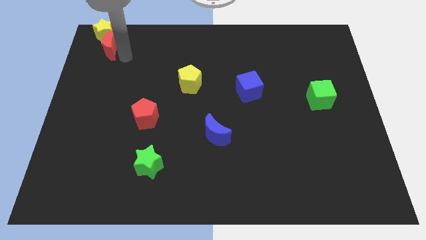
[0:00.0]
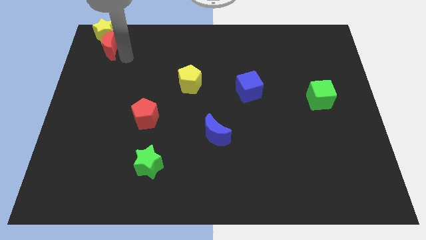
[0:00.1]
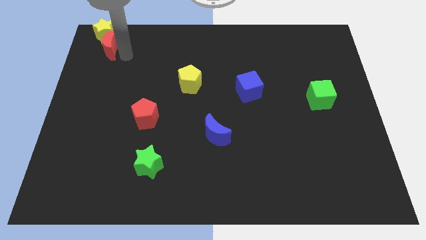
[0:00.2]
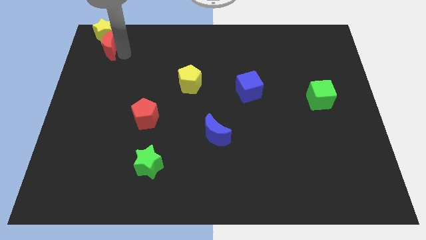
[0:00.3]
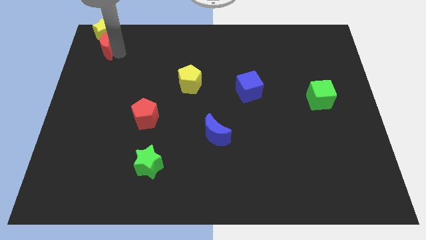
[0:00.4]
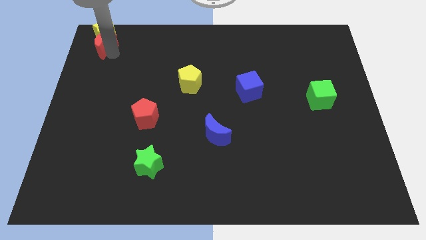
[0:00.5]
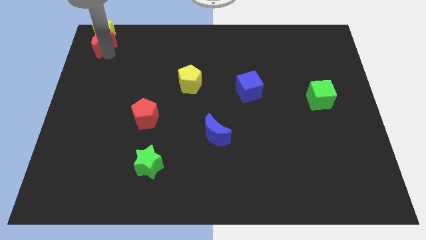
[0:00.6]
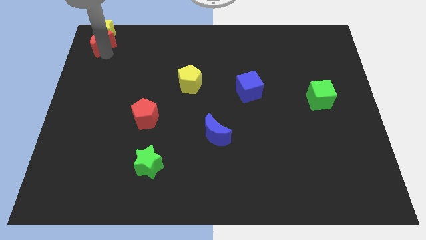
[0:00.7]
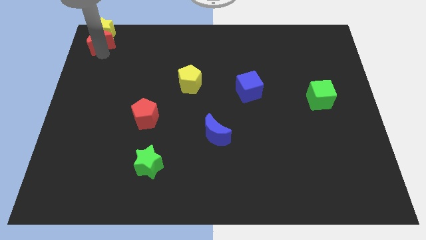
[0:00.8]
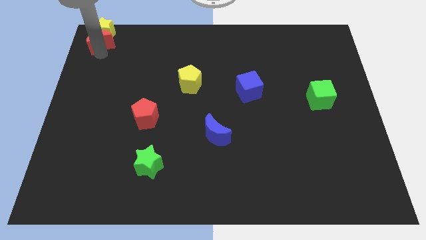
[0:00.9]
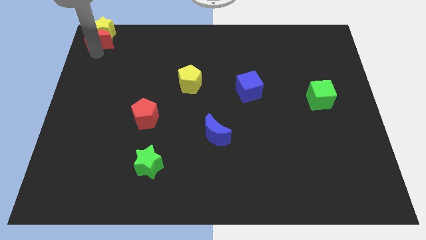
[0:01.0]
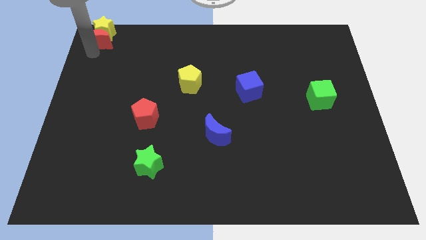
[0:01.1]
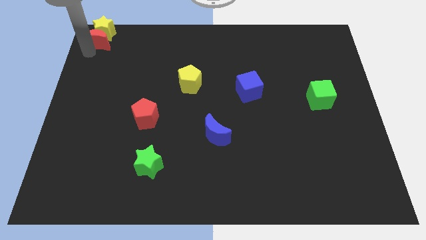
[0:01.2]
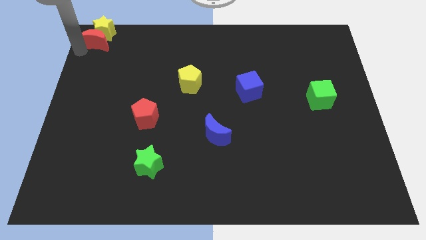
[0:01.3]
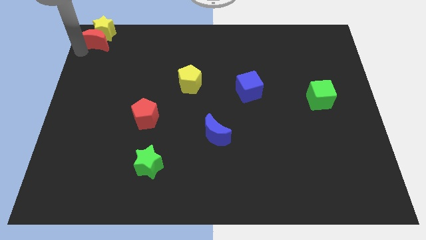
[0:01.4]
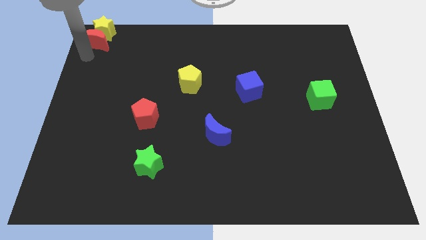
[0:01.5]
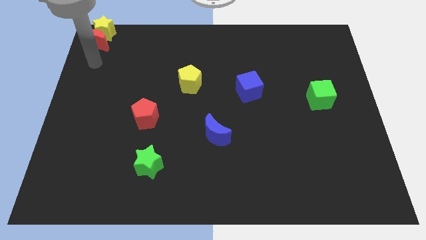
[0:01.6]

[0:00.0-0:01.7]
adjust the red moon vertically below the yellow star

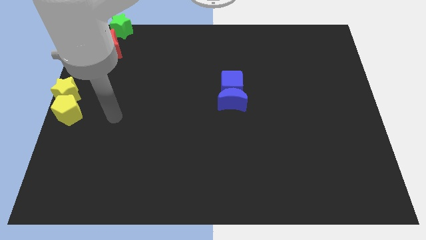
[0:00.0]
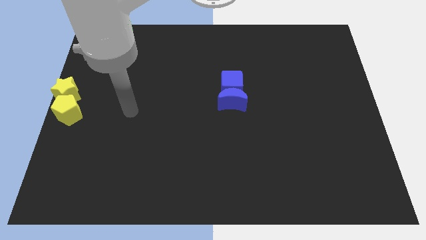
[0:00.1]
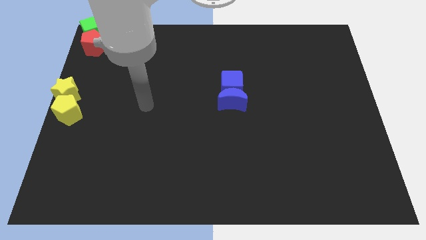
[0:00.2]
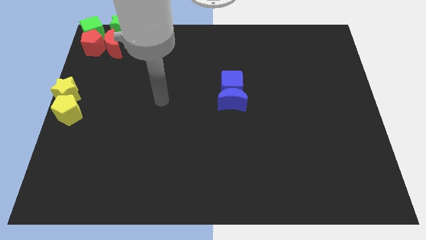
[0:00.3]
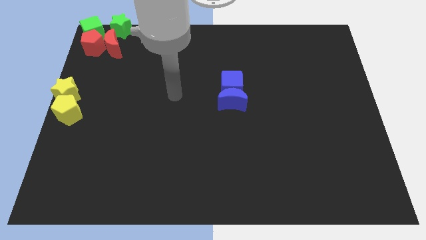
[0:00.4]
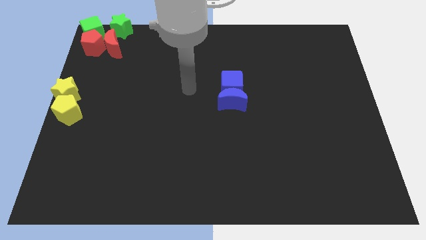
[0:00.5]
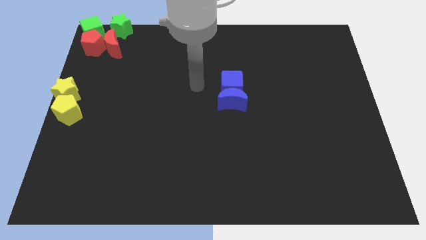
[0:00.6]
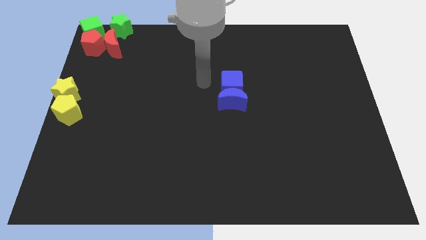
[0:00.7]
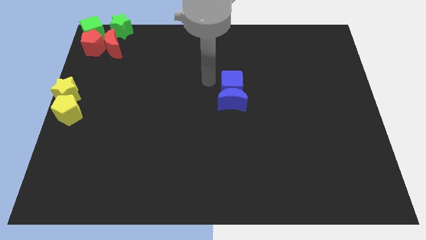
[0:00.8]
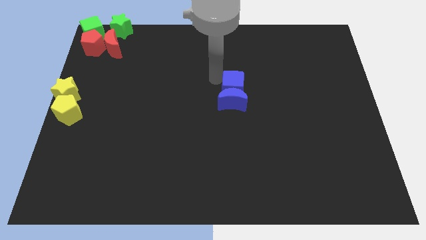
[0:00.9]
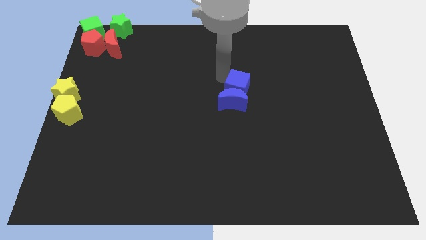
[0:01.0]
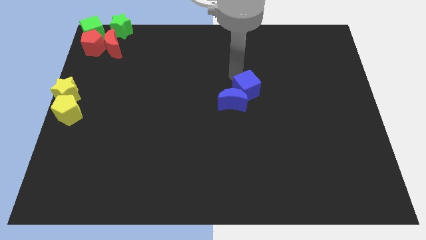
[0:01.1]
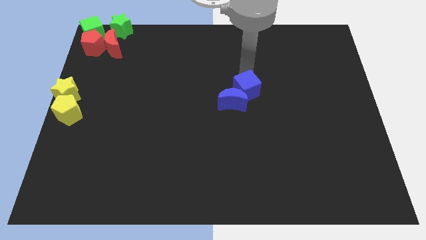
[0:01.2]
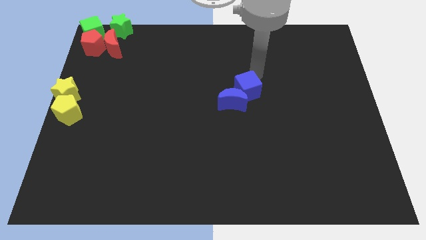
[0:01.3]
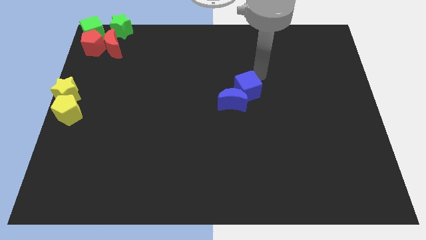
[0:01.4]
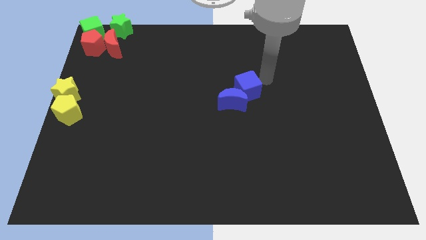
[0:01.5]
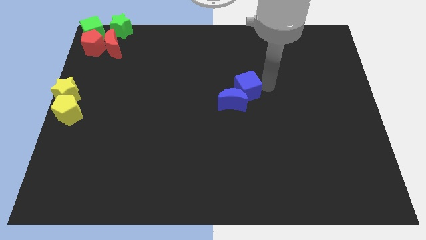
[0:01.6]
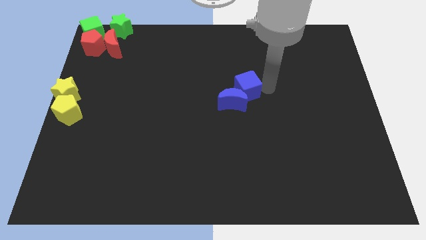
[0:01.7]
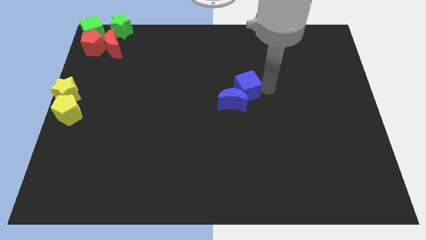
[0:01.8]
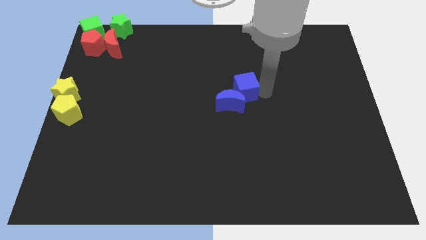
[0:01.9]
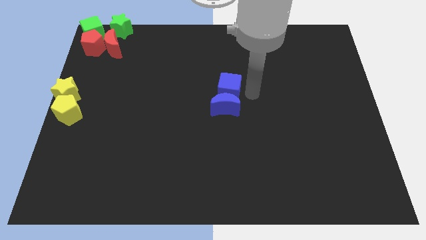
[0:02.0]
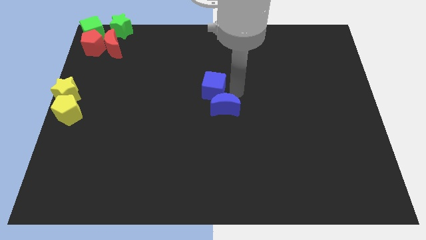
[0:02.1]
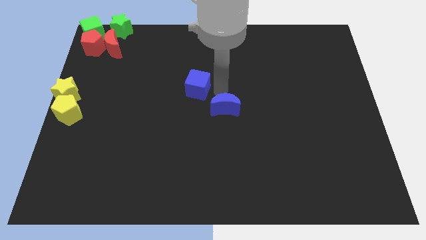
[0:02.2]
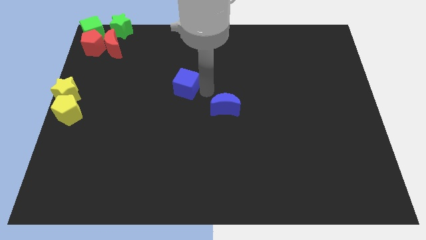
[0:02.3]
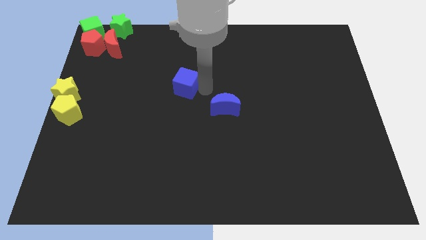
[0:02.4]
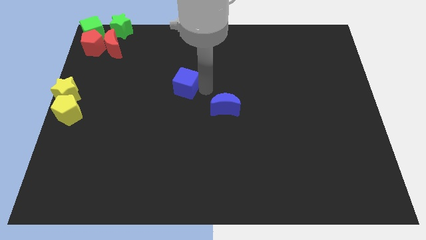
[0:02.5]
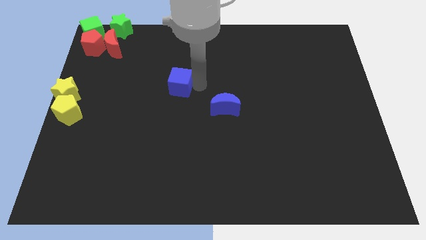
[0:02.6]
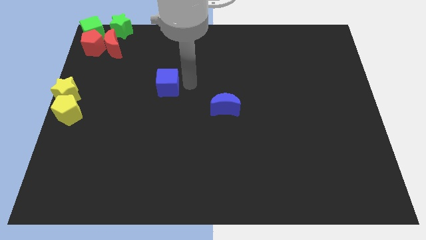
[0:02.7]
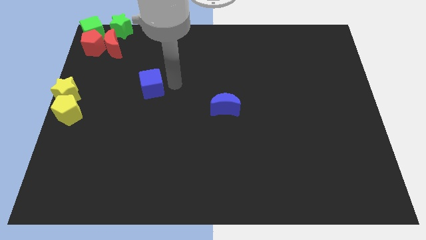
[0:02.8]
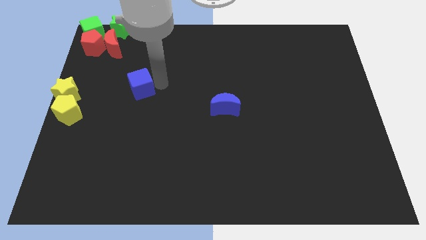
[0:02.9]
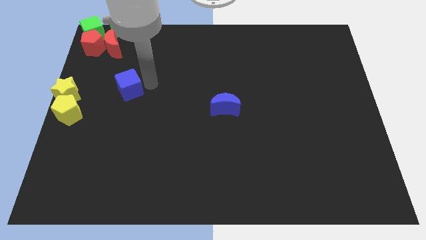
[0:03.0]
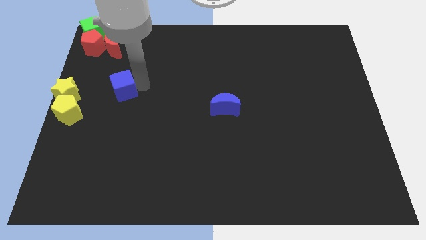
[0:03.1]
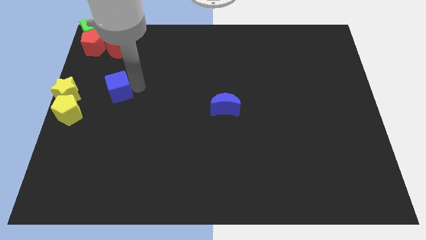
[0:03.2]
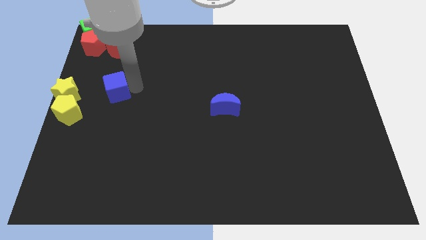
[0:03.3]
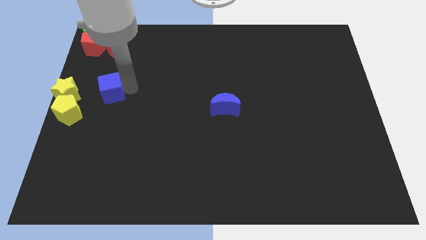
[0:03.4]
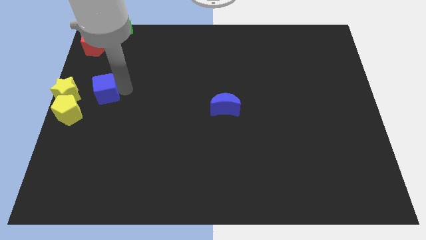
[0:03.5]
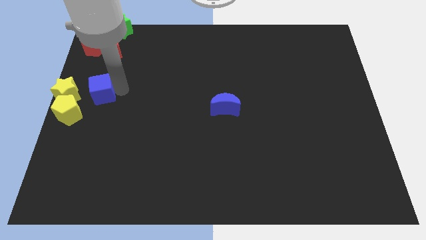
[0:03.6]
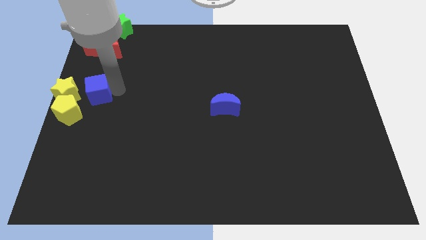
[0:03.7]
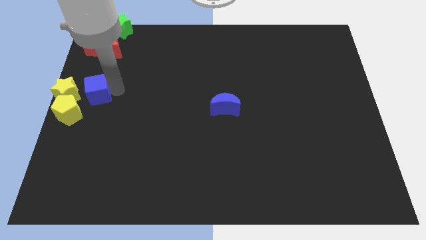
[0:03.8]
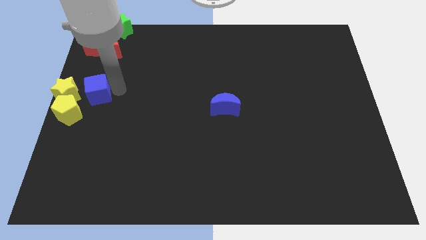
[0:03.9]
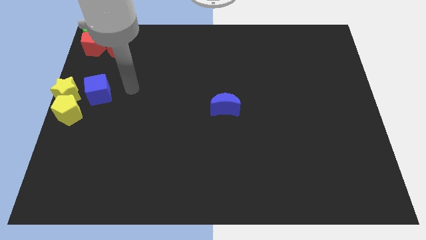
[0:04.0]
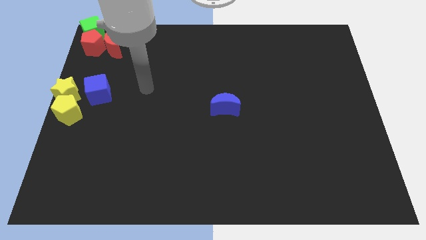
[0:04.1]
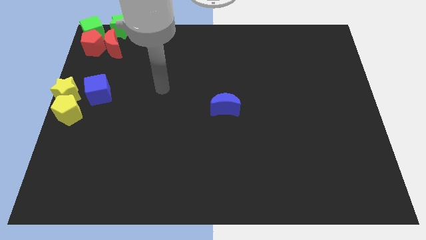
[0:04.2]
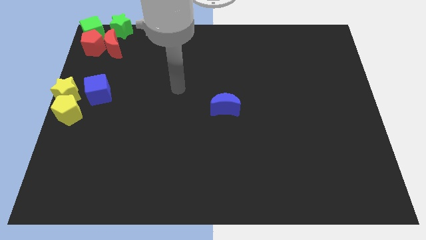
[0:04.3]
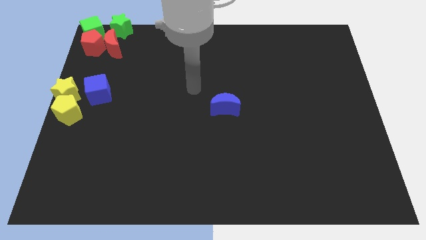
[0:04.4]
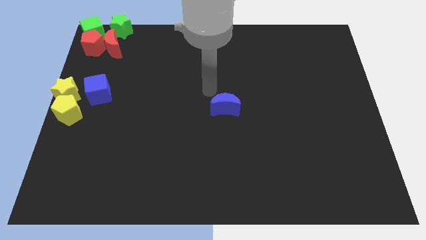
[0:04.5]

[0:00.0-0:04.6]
move the blue cube to the right of the yellow star

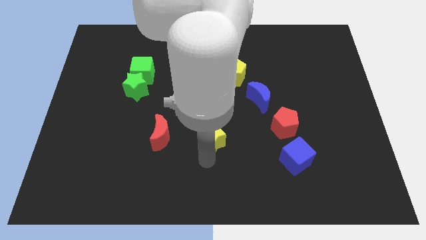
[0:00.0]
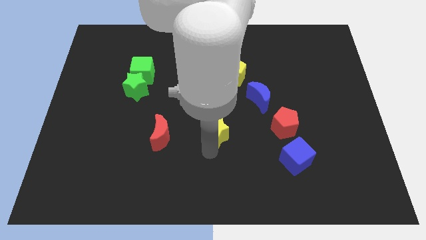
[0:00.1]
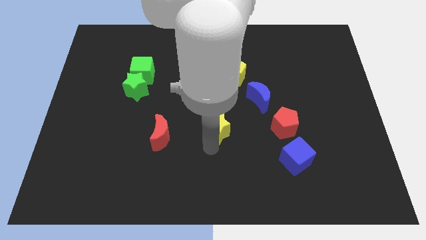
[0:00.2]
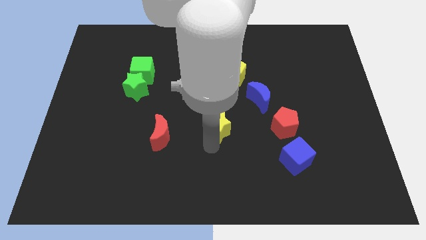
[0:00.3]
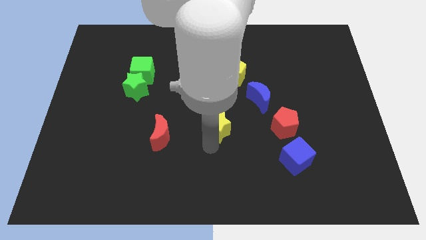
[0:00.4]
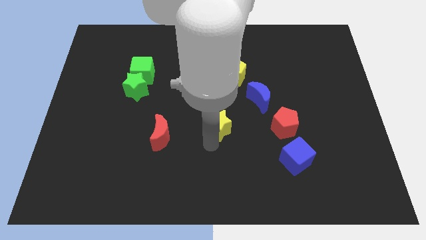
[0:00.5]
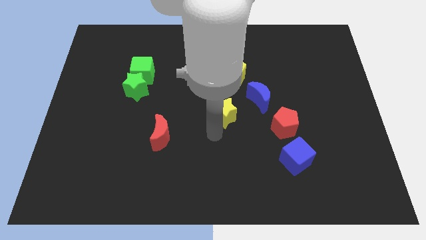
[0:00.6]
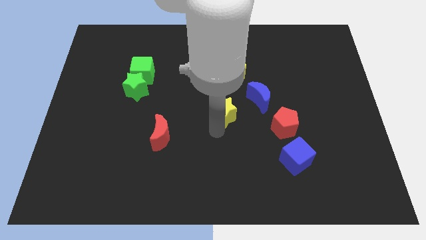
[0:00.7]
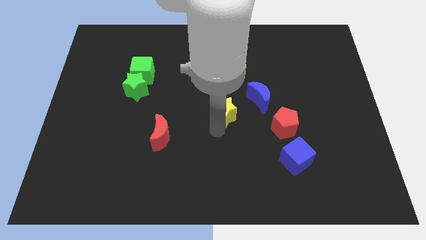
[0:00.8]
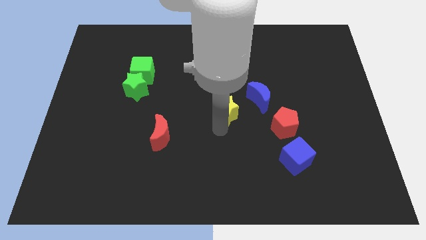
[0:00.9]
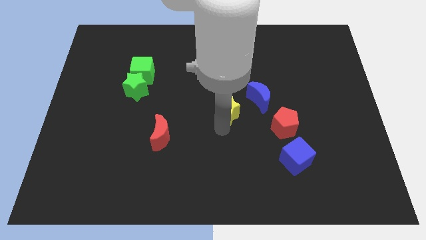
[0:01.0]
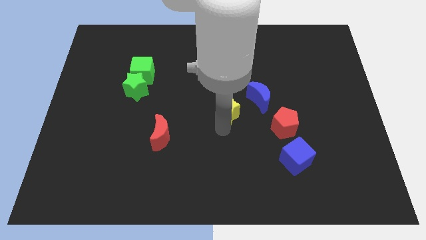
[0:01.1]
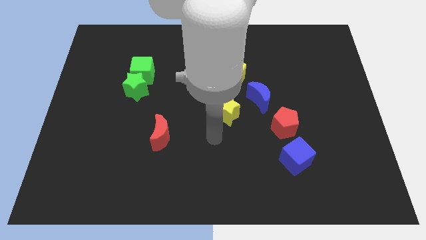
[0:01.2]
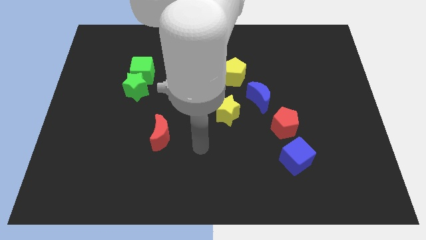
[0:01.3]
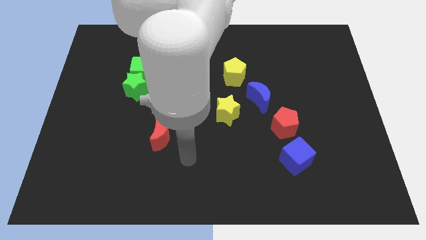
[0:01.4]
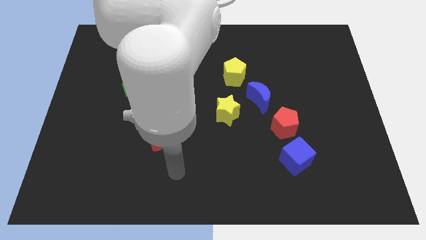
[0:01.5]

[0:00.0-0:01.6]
drag the yellow star diagonal to the blue cube

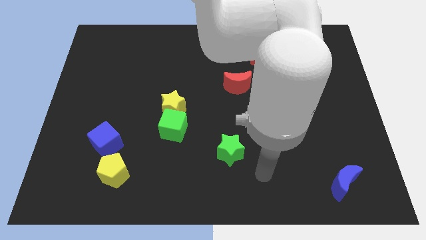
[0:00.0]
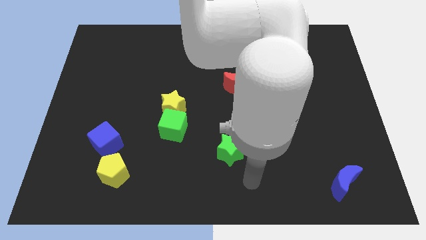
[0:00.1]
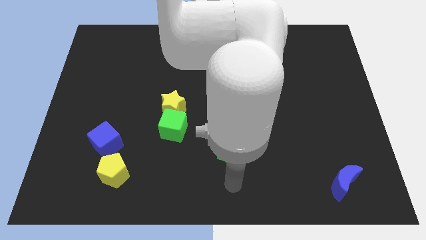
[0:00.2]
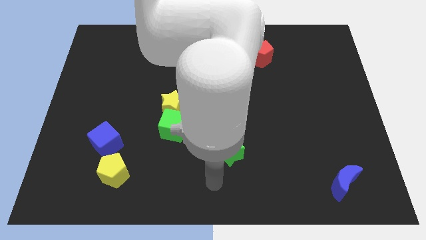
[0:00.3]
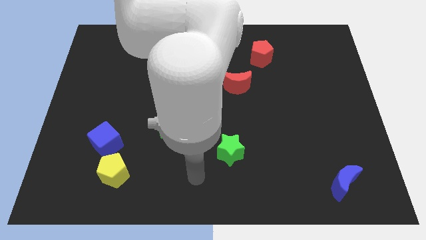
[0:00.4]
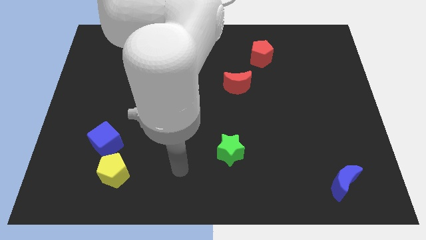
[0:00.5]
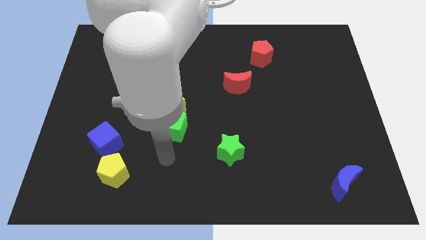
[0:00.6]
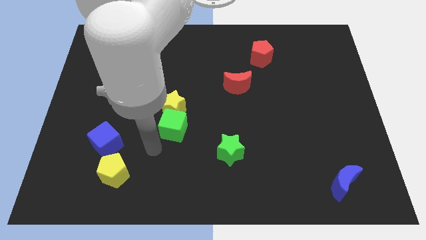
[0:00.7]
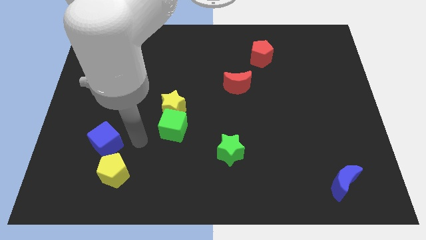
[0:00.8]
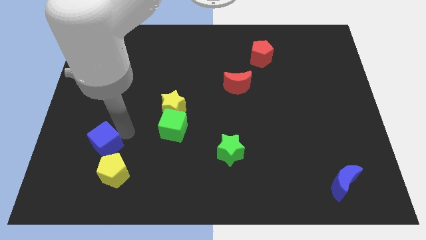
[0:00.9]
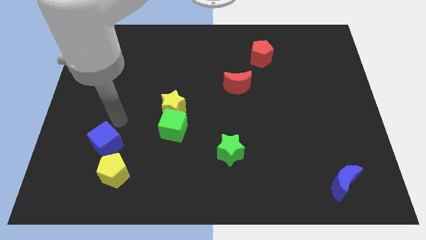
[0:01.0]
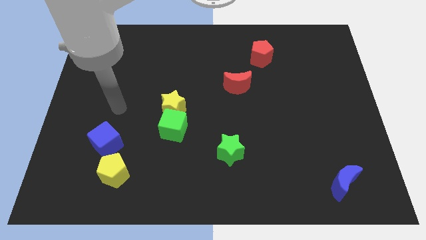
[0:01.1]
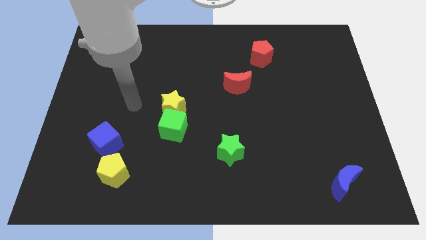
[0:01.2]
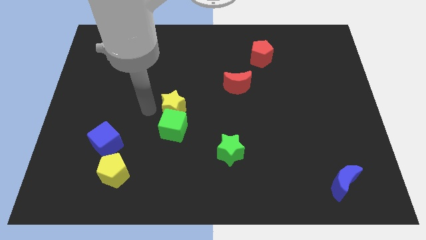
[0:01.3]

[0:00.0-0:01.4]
point your arm at the left of the yellow star
